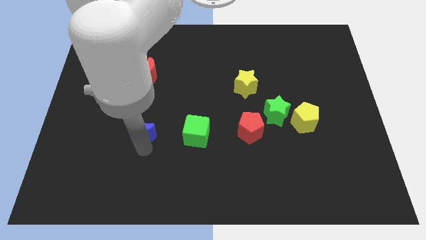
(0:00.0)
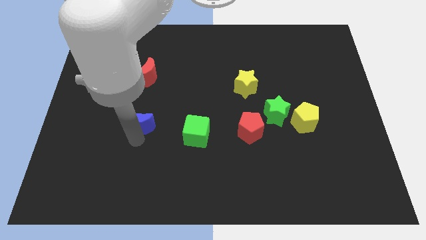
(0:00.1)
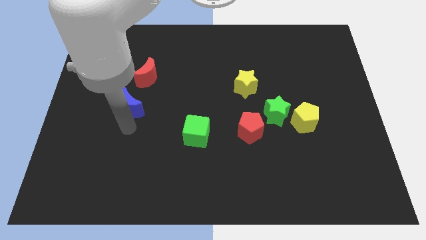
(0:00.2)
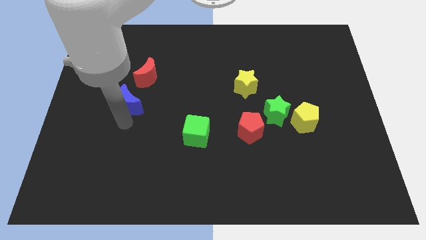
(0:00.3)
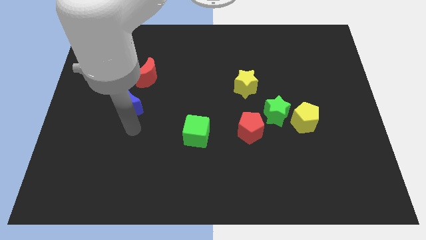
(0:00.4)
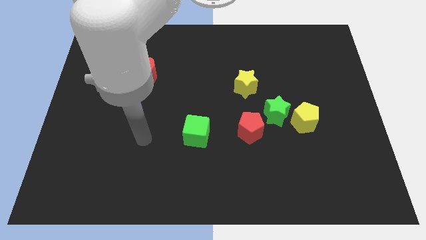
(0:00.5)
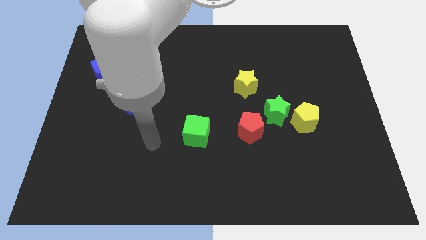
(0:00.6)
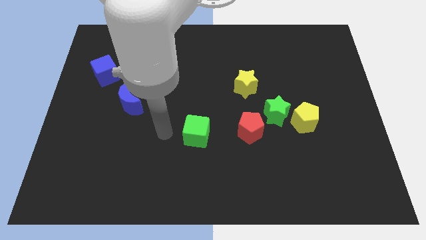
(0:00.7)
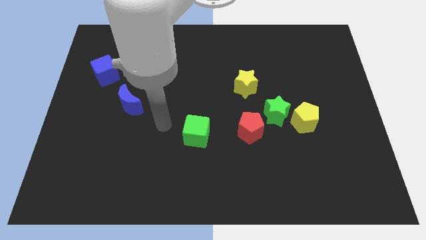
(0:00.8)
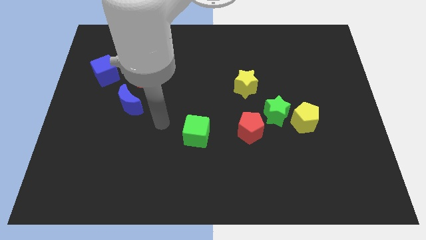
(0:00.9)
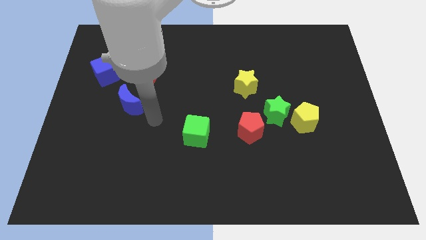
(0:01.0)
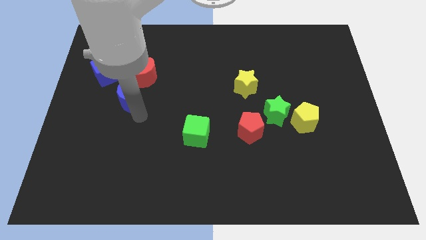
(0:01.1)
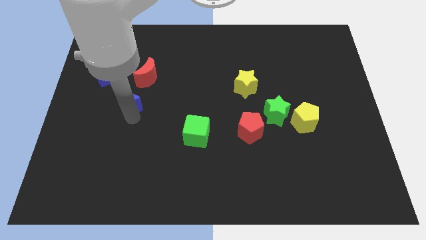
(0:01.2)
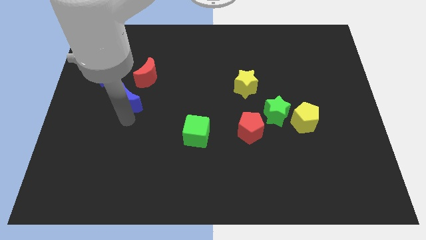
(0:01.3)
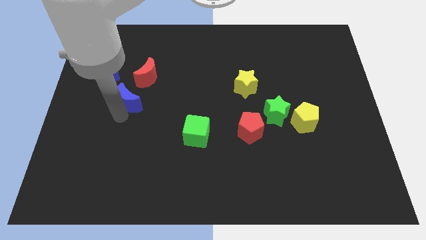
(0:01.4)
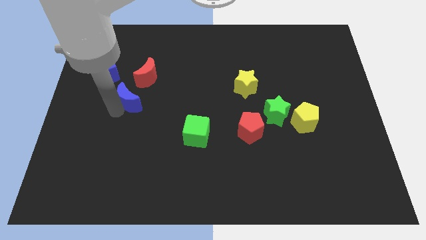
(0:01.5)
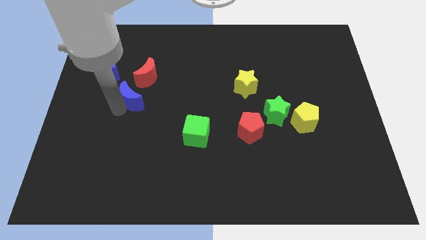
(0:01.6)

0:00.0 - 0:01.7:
place the blue crescent at the bottom left side of the red moon

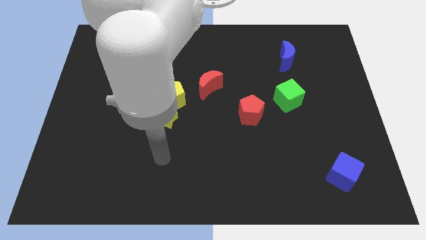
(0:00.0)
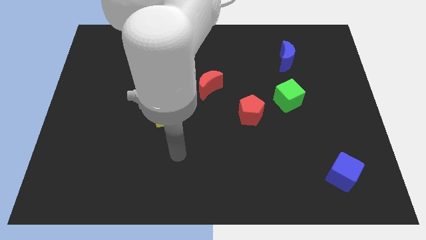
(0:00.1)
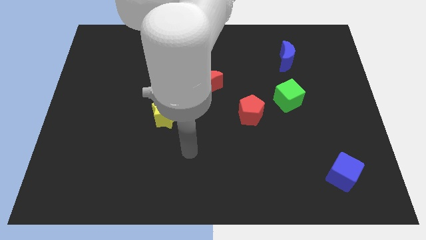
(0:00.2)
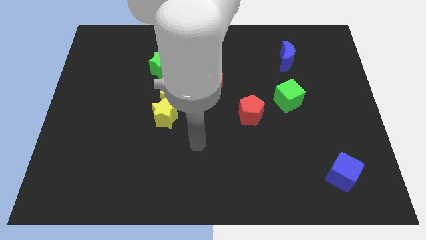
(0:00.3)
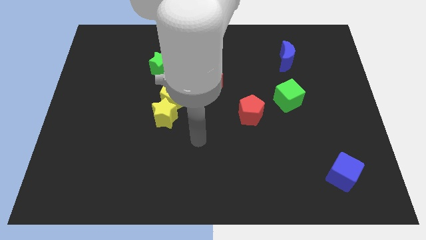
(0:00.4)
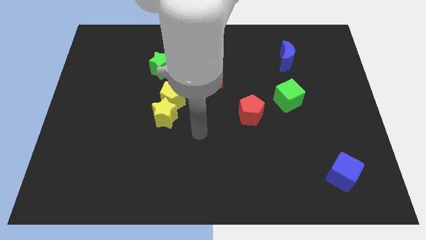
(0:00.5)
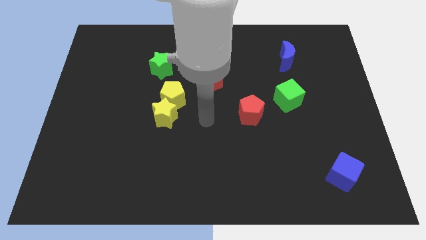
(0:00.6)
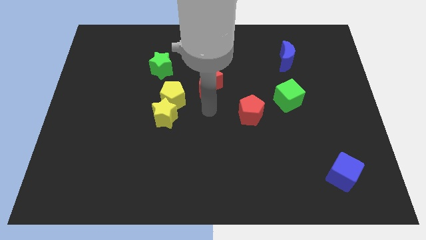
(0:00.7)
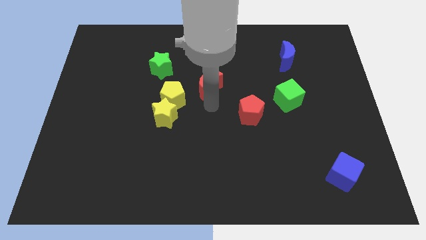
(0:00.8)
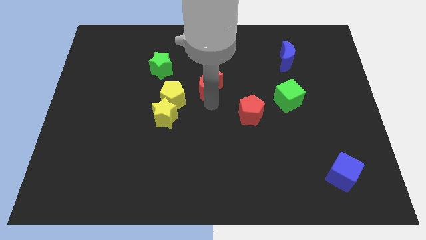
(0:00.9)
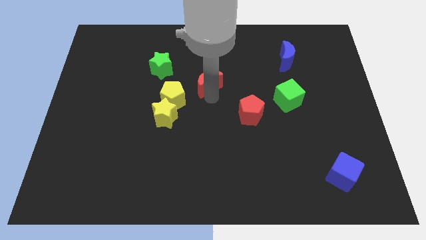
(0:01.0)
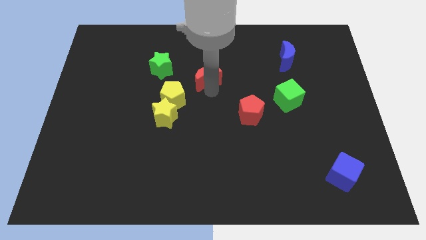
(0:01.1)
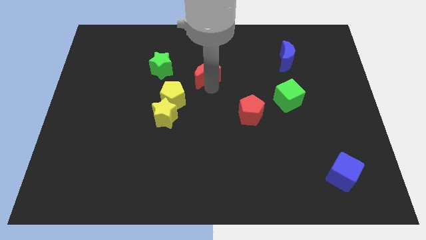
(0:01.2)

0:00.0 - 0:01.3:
touch the bottom of red moon

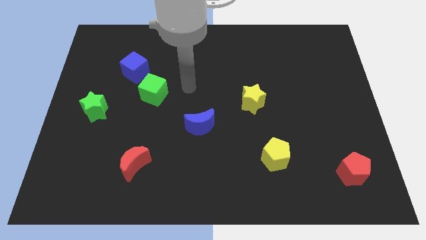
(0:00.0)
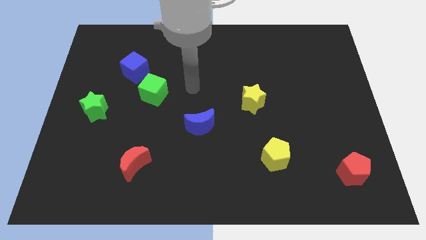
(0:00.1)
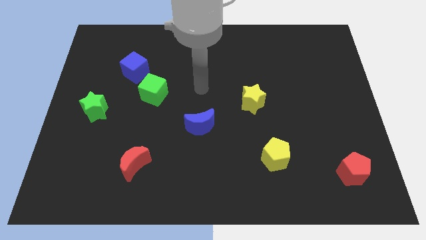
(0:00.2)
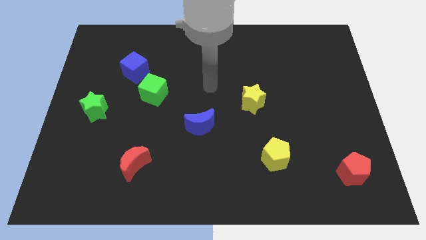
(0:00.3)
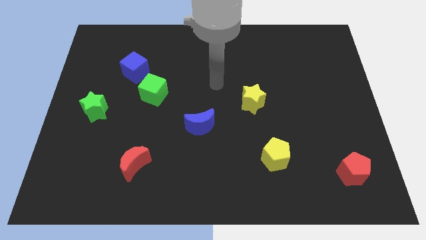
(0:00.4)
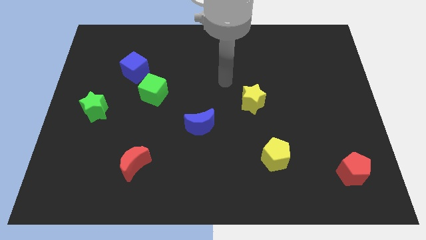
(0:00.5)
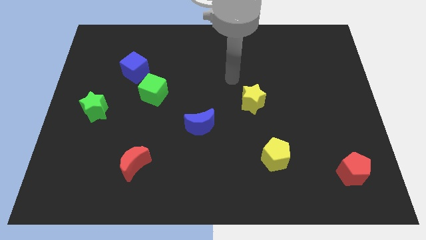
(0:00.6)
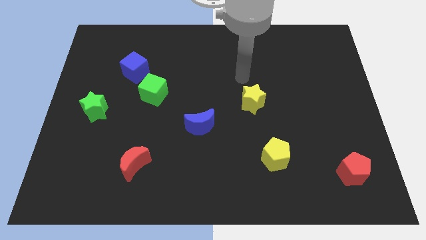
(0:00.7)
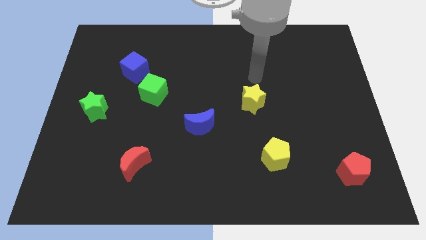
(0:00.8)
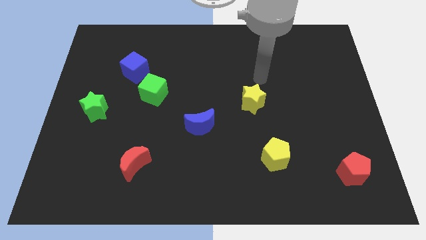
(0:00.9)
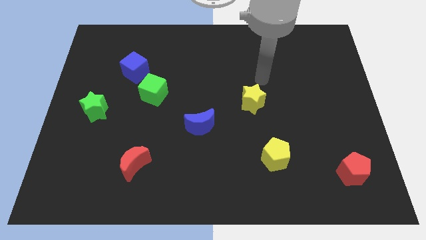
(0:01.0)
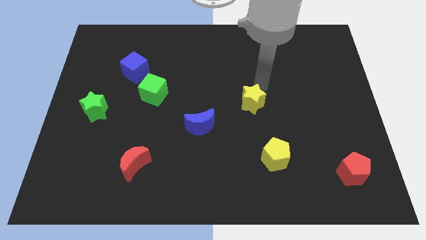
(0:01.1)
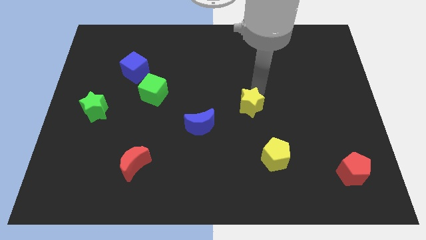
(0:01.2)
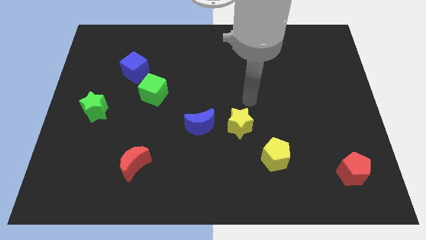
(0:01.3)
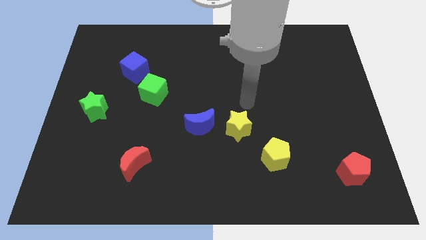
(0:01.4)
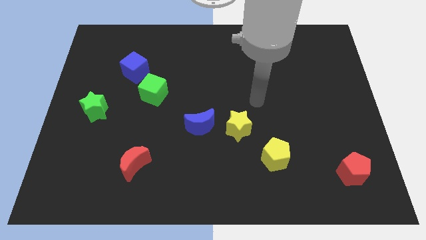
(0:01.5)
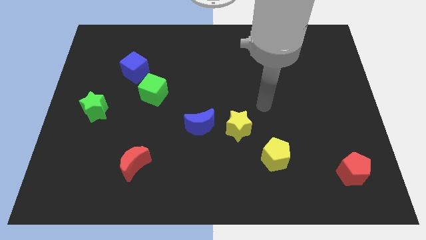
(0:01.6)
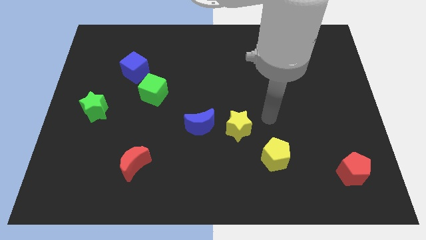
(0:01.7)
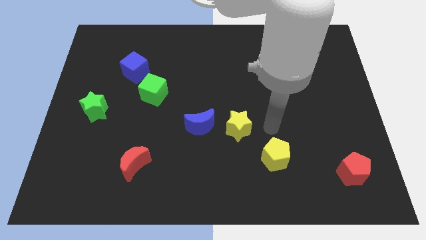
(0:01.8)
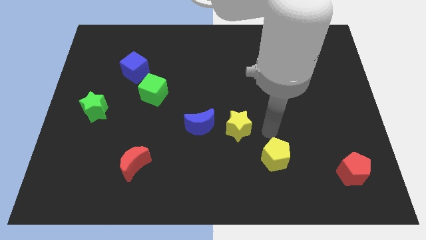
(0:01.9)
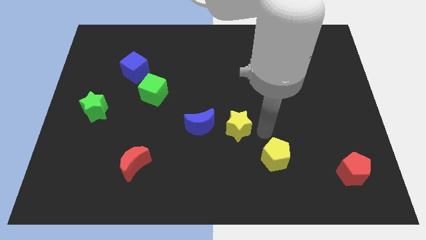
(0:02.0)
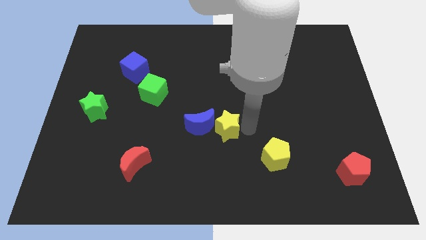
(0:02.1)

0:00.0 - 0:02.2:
push the yellow star to the right side of the blue moon

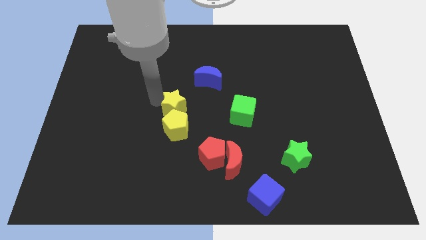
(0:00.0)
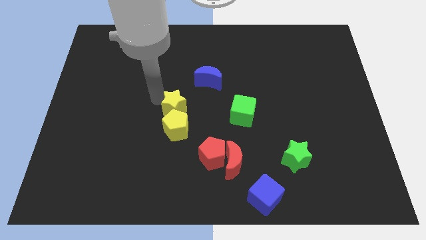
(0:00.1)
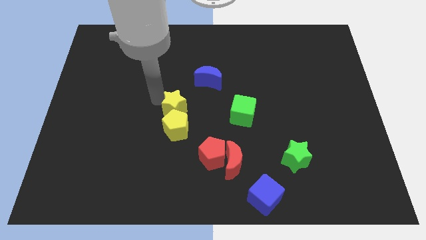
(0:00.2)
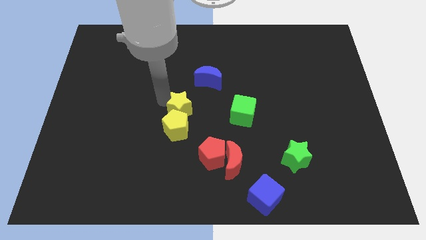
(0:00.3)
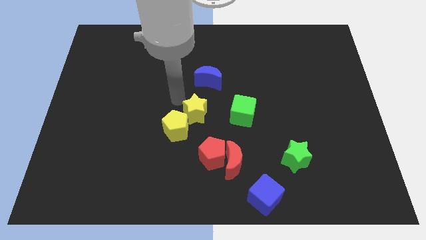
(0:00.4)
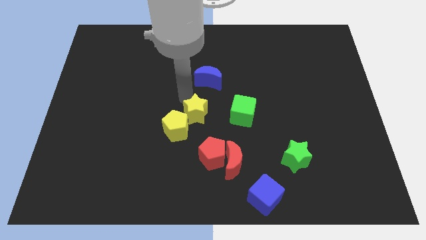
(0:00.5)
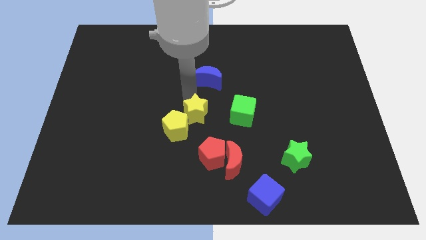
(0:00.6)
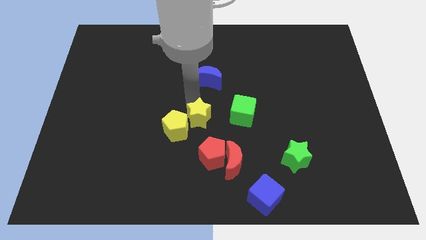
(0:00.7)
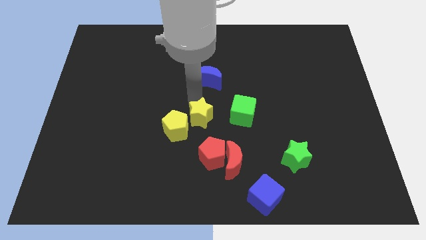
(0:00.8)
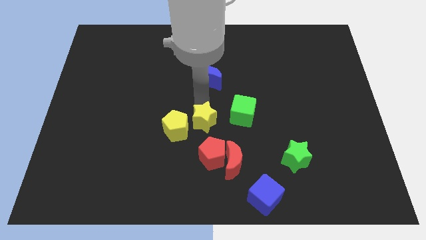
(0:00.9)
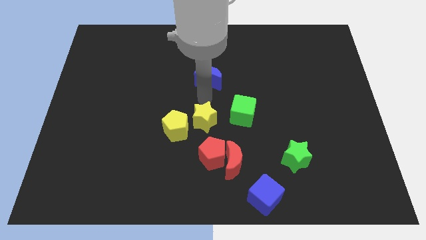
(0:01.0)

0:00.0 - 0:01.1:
place yellow star above red pentagon

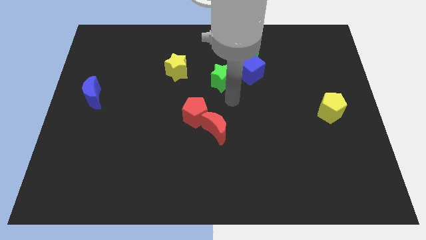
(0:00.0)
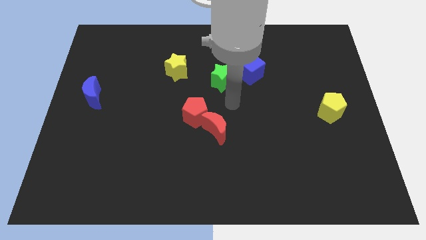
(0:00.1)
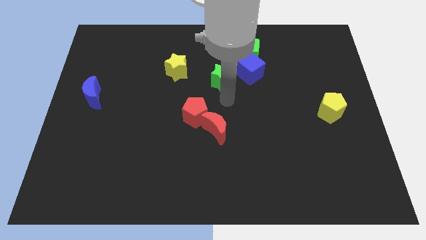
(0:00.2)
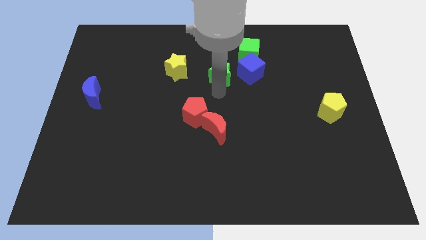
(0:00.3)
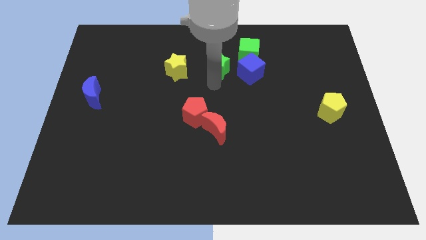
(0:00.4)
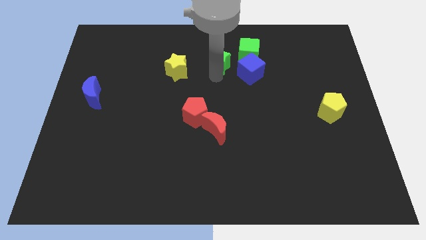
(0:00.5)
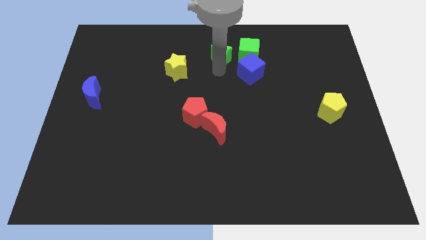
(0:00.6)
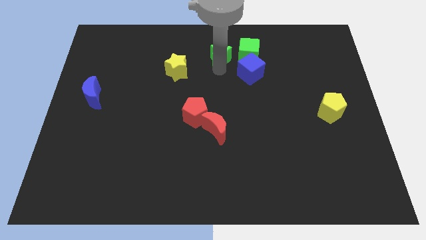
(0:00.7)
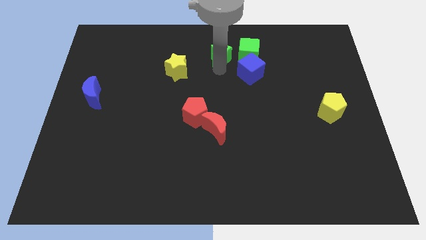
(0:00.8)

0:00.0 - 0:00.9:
move the green star left to the green cube

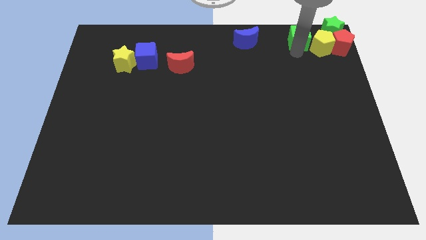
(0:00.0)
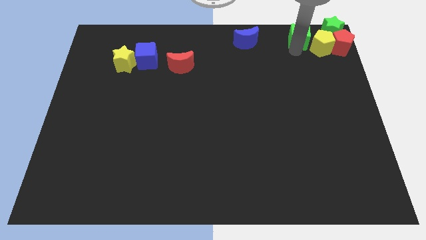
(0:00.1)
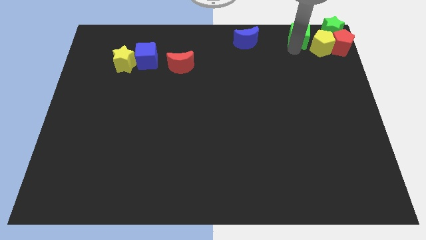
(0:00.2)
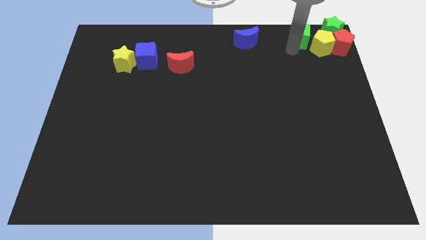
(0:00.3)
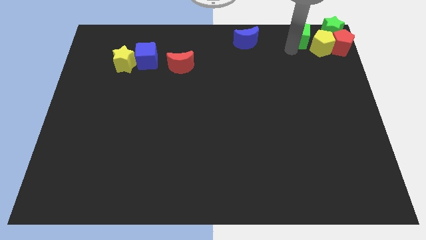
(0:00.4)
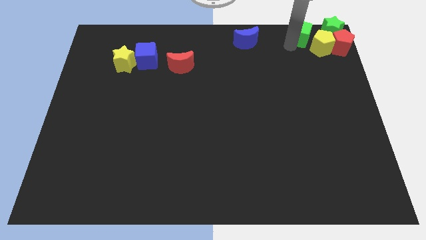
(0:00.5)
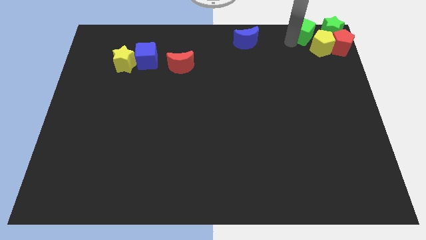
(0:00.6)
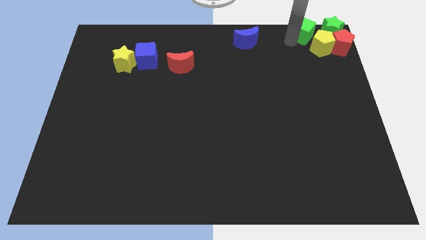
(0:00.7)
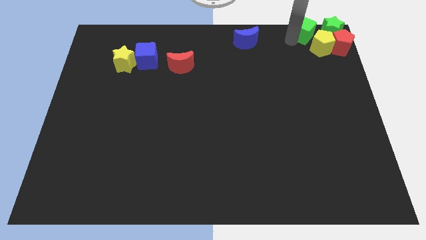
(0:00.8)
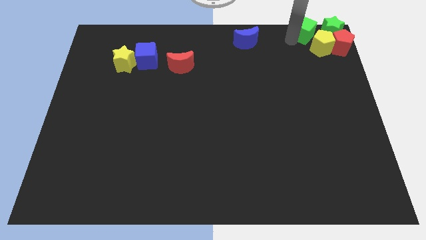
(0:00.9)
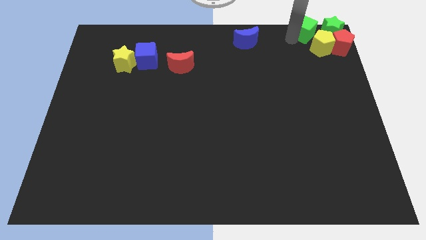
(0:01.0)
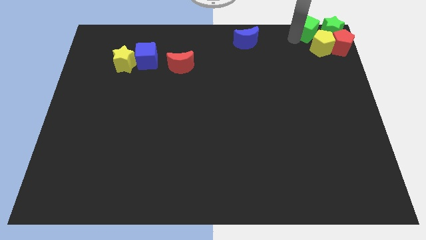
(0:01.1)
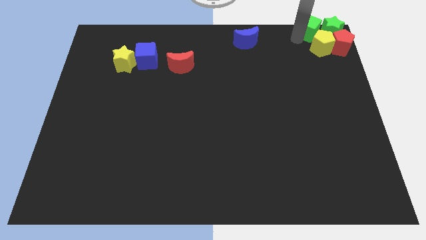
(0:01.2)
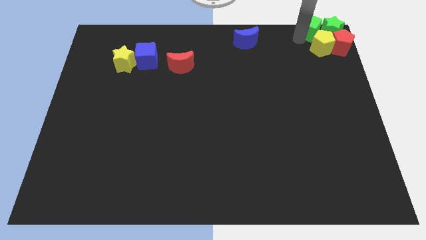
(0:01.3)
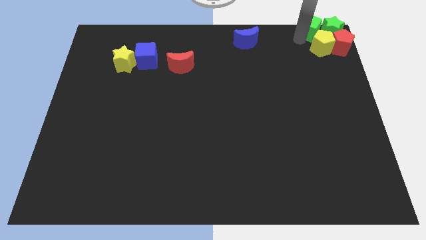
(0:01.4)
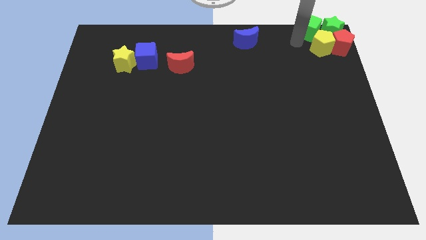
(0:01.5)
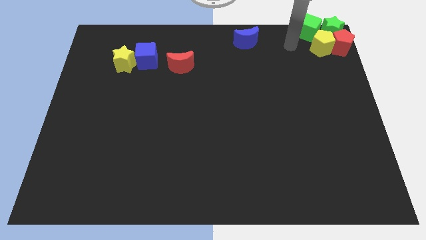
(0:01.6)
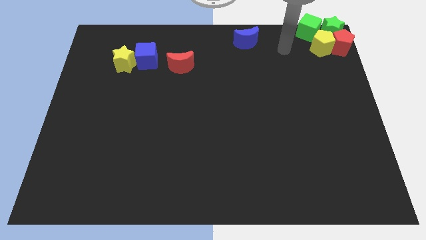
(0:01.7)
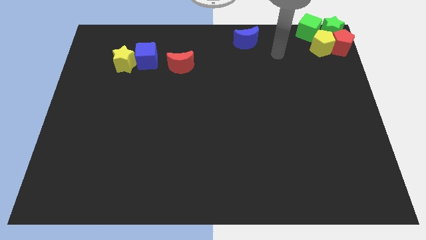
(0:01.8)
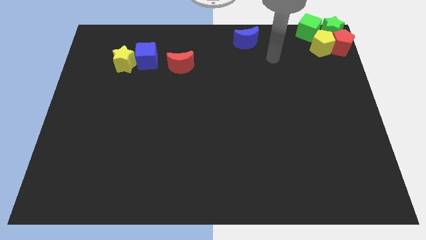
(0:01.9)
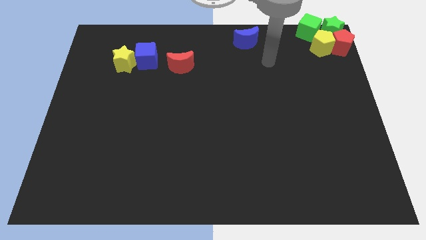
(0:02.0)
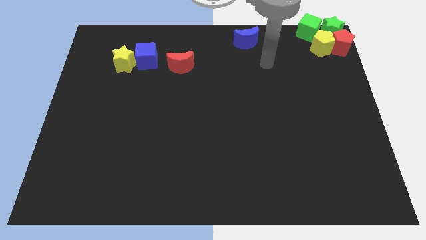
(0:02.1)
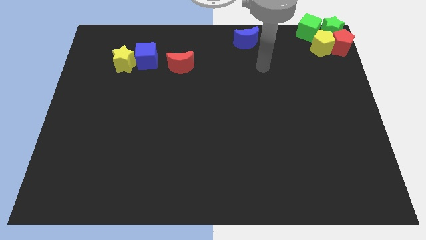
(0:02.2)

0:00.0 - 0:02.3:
push the green cube to the left of the green star
